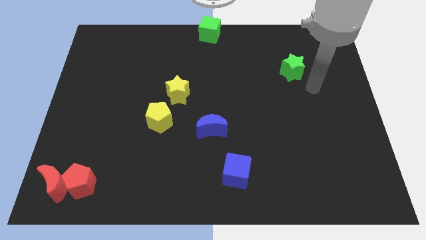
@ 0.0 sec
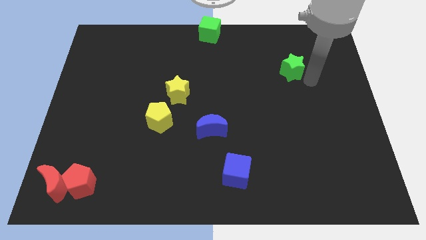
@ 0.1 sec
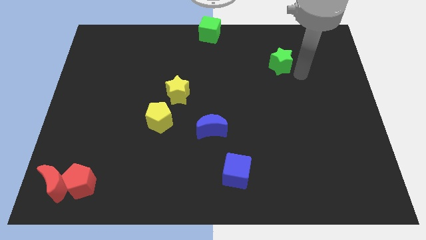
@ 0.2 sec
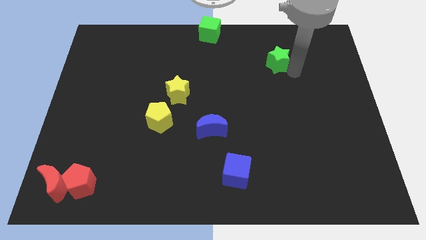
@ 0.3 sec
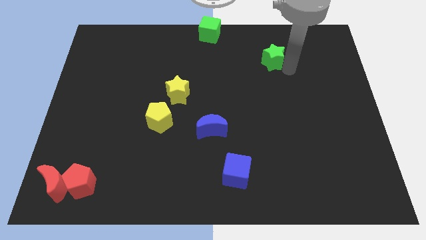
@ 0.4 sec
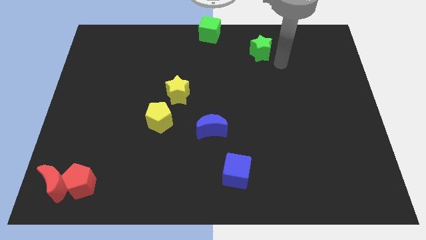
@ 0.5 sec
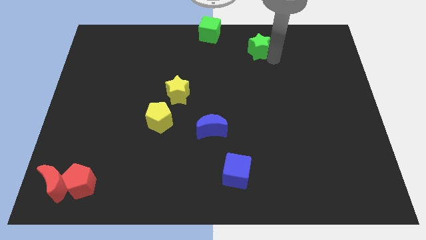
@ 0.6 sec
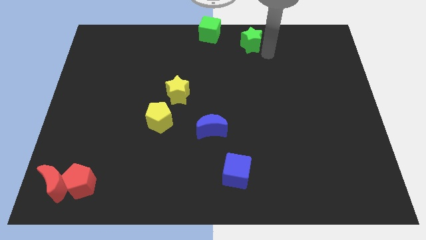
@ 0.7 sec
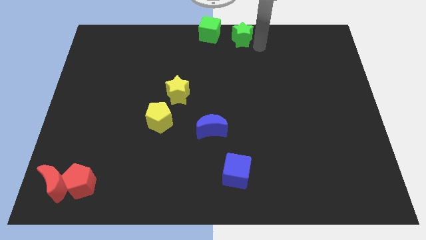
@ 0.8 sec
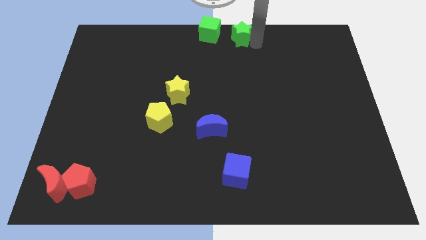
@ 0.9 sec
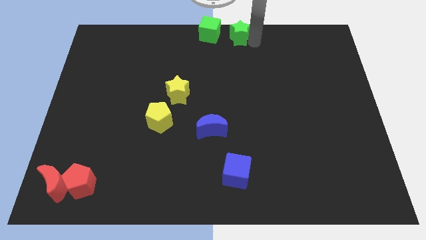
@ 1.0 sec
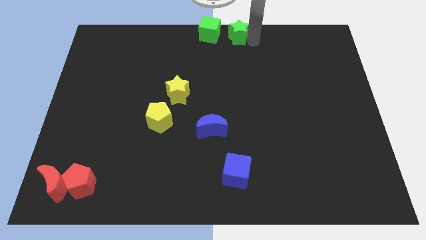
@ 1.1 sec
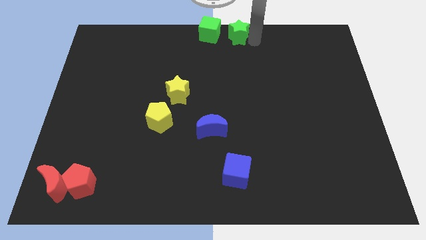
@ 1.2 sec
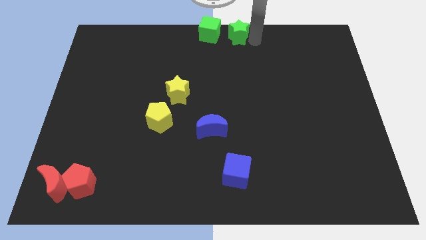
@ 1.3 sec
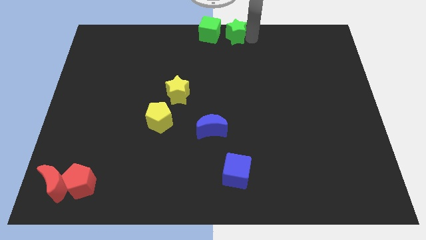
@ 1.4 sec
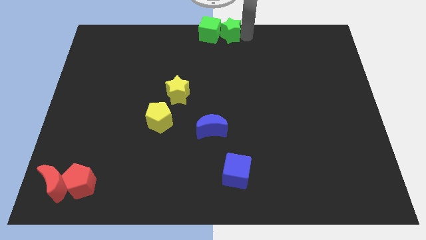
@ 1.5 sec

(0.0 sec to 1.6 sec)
place the green star adjacent to green cube

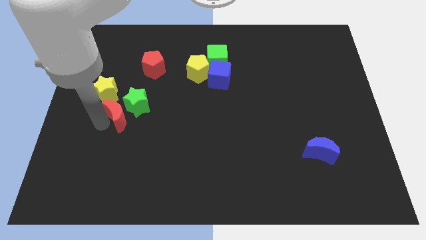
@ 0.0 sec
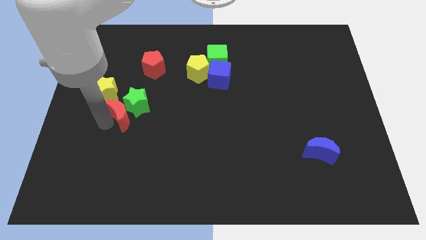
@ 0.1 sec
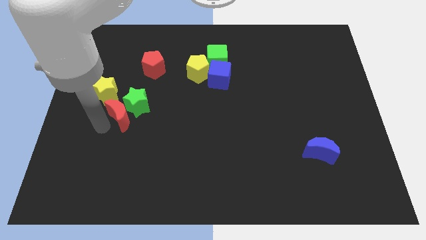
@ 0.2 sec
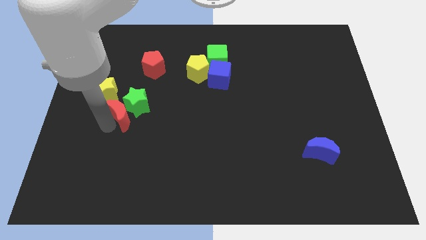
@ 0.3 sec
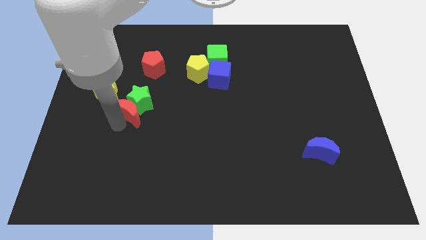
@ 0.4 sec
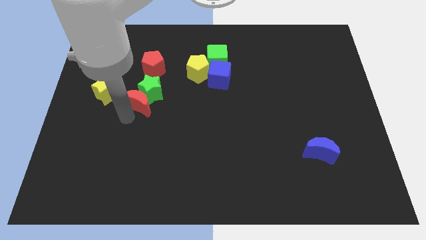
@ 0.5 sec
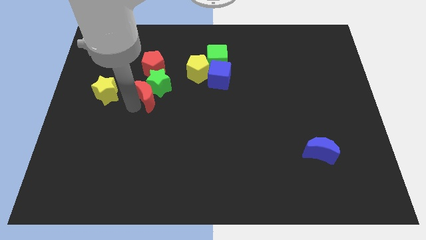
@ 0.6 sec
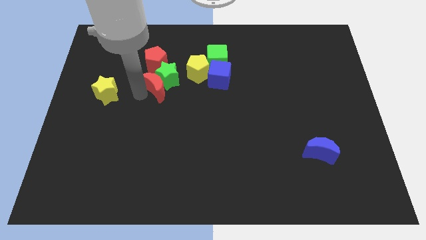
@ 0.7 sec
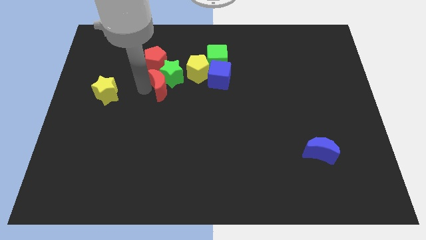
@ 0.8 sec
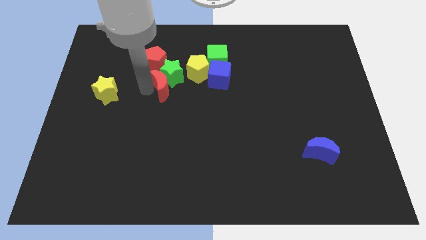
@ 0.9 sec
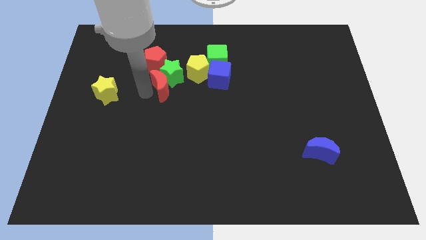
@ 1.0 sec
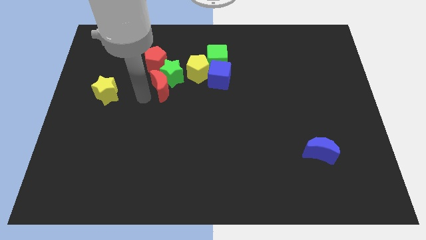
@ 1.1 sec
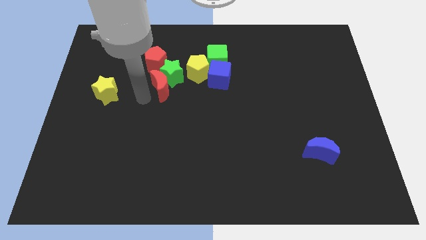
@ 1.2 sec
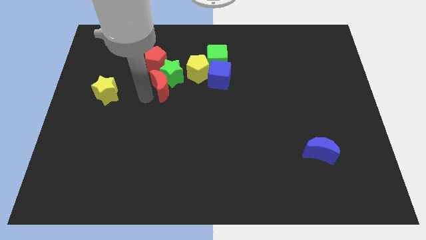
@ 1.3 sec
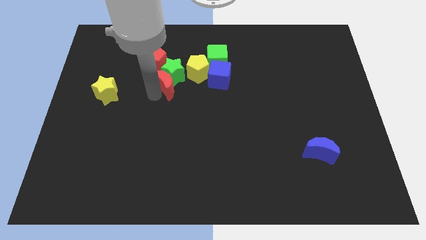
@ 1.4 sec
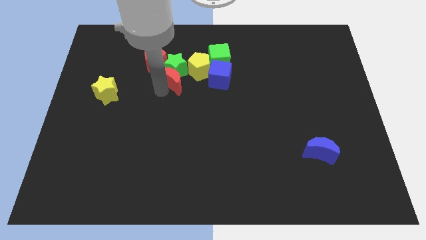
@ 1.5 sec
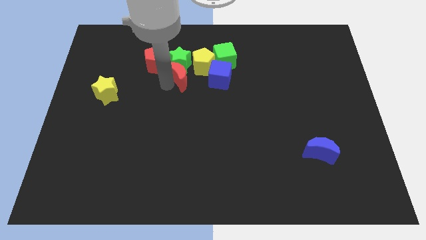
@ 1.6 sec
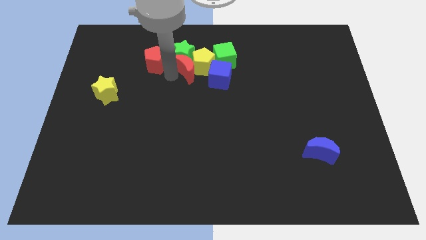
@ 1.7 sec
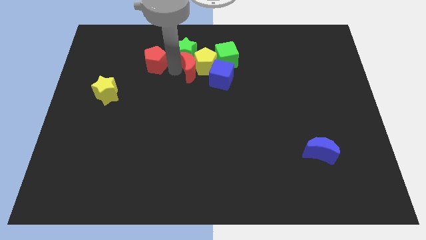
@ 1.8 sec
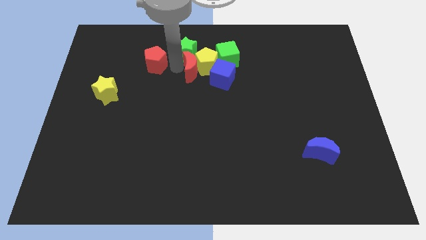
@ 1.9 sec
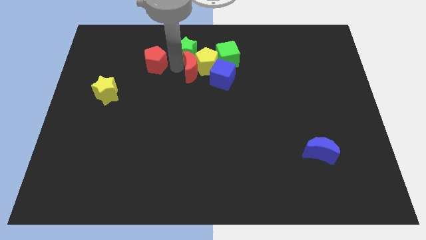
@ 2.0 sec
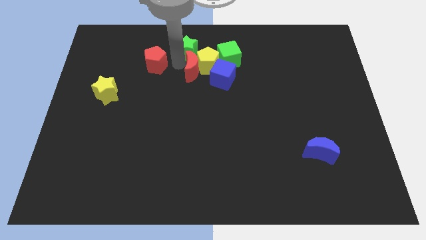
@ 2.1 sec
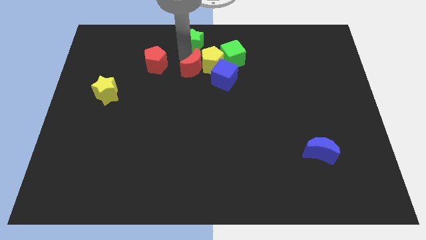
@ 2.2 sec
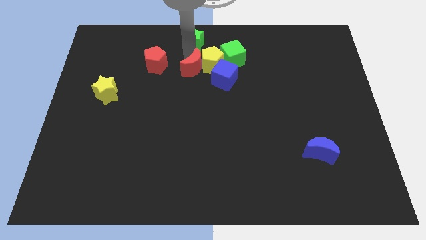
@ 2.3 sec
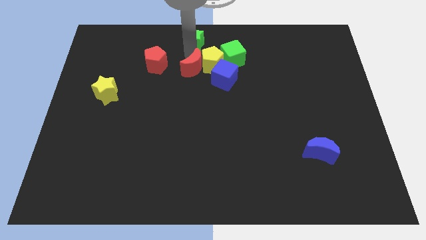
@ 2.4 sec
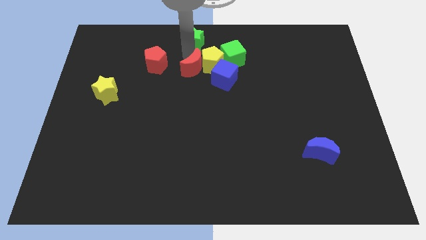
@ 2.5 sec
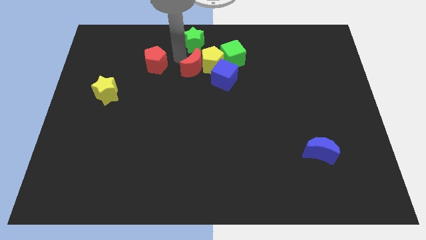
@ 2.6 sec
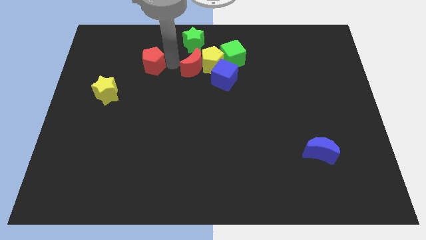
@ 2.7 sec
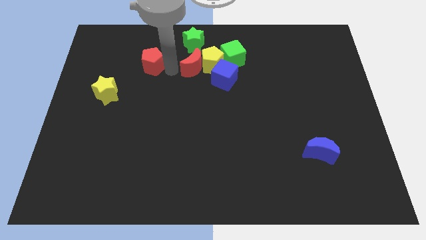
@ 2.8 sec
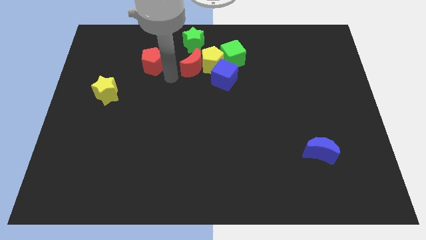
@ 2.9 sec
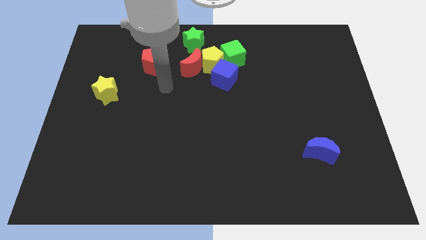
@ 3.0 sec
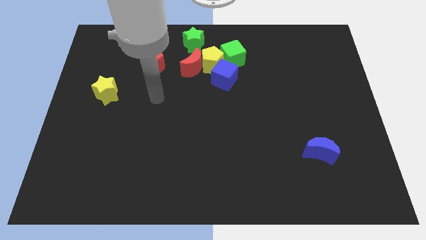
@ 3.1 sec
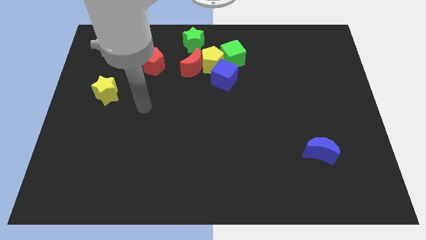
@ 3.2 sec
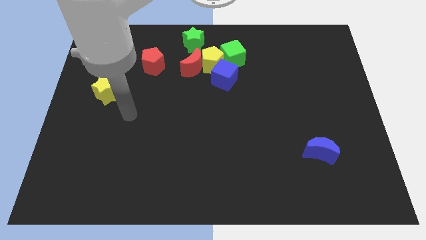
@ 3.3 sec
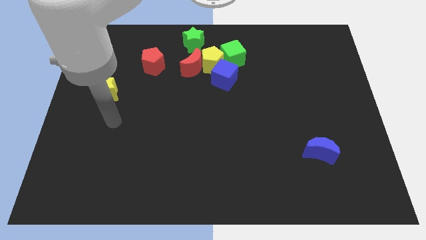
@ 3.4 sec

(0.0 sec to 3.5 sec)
push the red crescent with the green star towards the top of the board

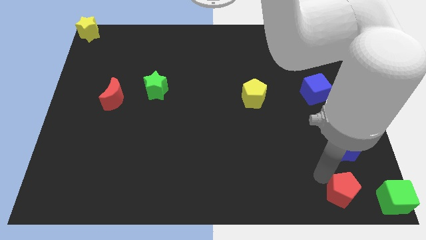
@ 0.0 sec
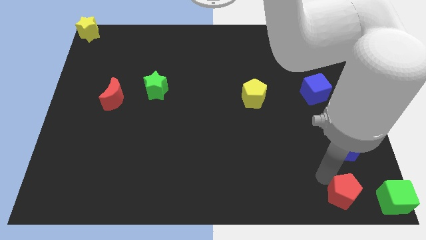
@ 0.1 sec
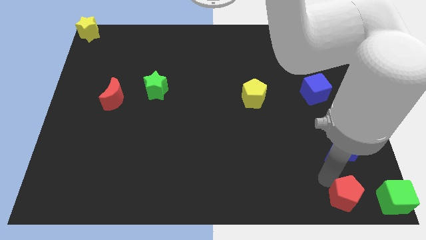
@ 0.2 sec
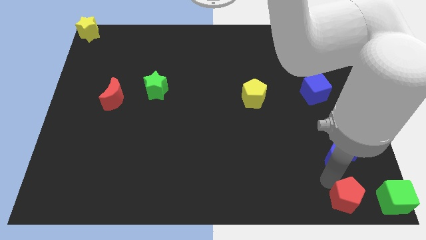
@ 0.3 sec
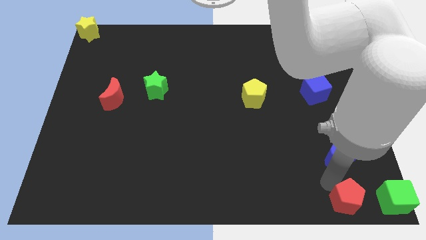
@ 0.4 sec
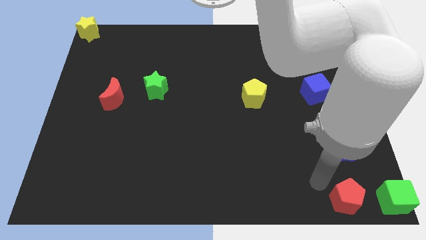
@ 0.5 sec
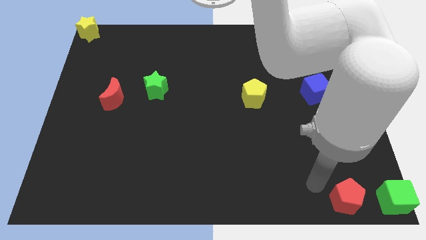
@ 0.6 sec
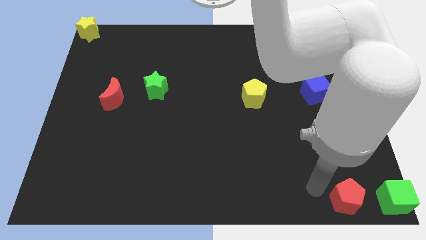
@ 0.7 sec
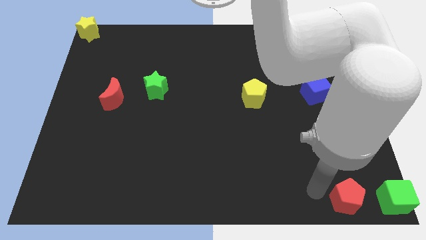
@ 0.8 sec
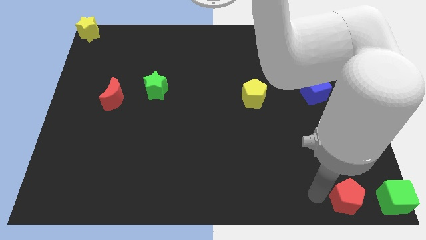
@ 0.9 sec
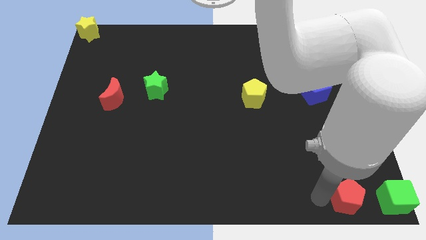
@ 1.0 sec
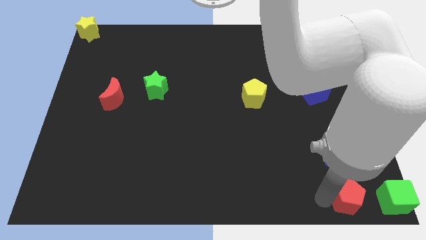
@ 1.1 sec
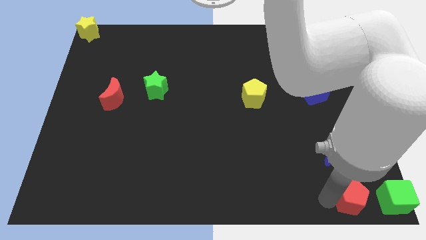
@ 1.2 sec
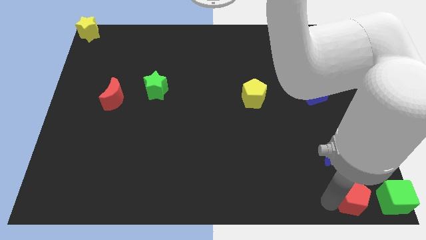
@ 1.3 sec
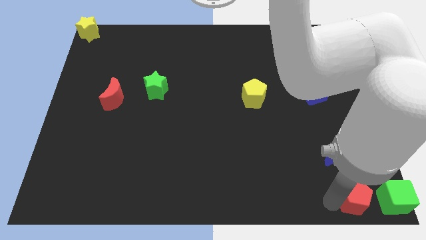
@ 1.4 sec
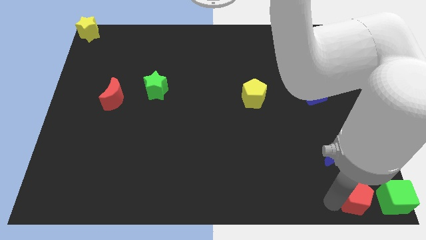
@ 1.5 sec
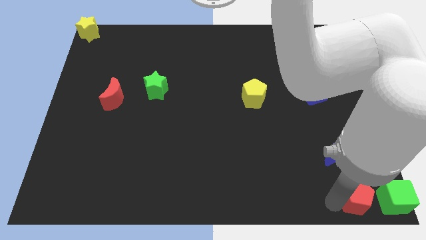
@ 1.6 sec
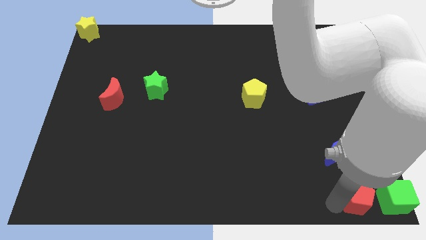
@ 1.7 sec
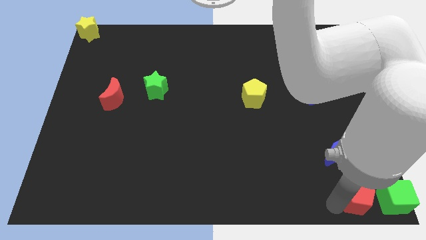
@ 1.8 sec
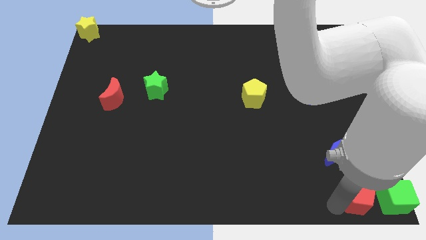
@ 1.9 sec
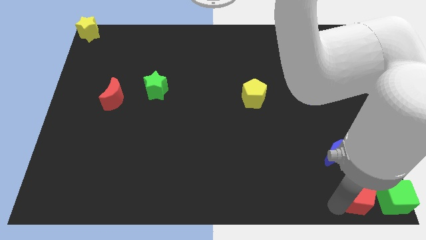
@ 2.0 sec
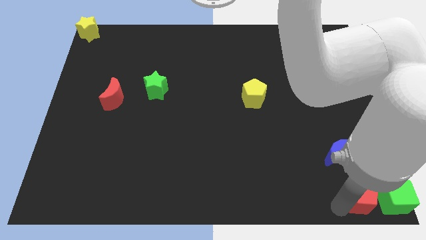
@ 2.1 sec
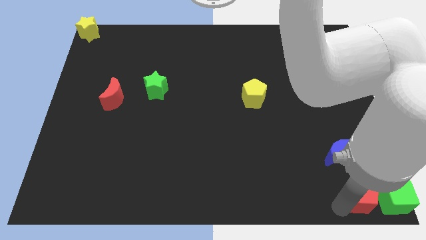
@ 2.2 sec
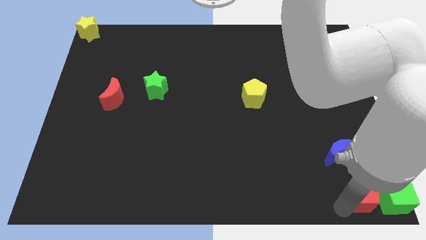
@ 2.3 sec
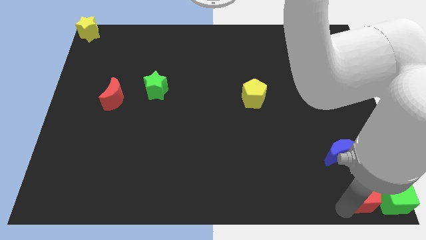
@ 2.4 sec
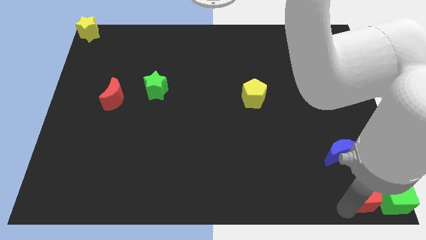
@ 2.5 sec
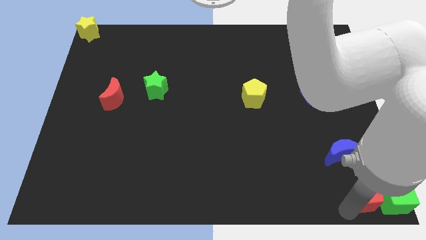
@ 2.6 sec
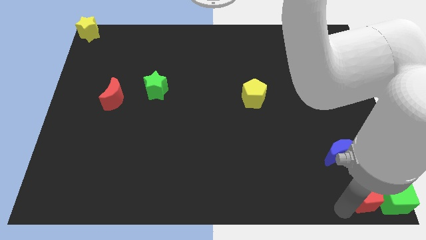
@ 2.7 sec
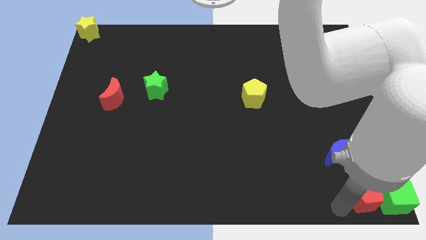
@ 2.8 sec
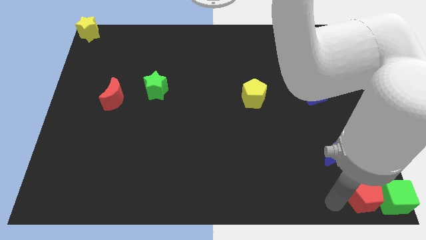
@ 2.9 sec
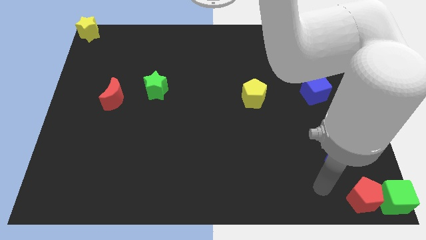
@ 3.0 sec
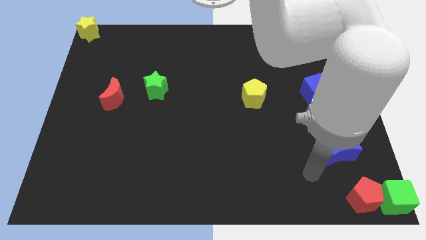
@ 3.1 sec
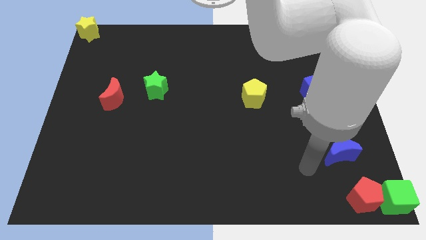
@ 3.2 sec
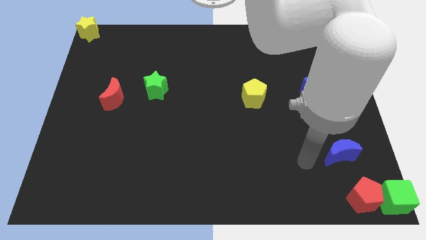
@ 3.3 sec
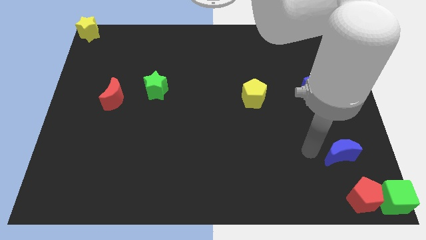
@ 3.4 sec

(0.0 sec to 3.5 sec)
move the red pentagon to the left side of the green cube

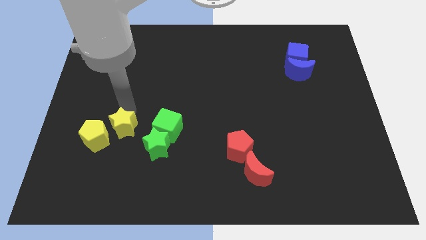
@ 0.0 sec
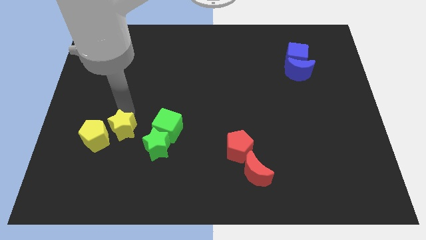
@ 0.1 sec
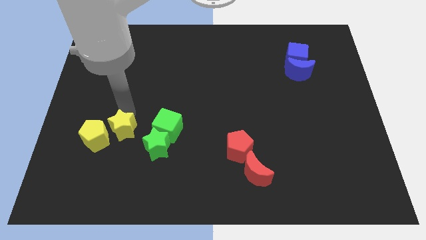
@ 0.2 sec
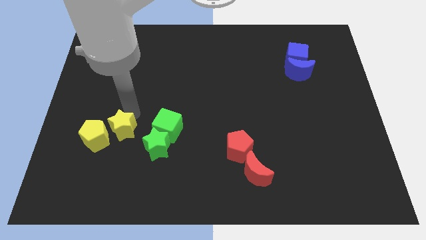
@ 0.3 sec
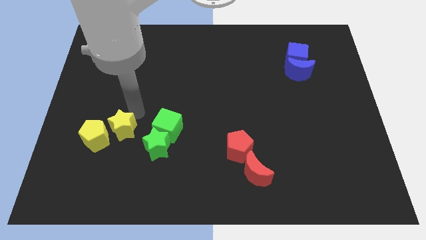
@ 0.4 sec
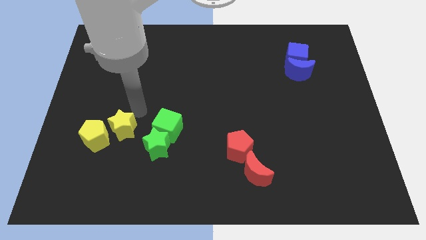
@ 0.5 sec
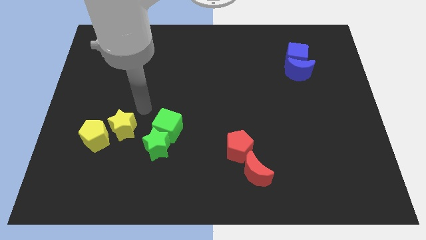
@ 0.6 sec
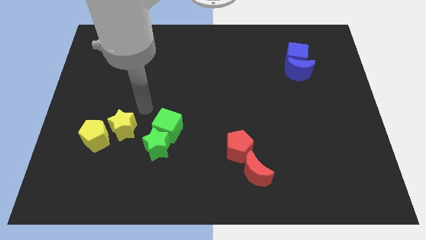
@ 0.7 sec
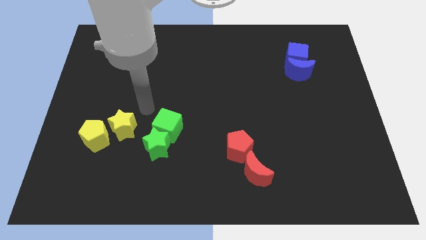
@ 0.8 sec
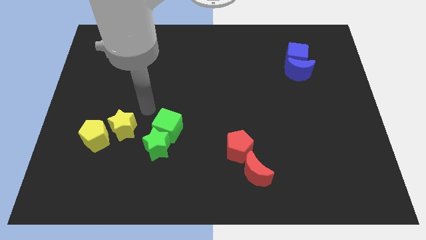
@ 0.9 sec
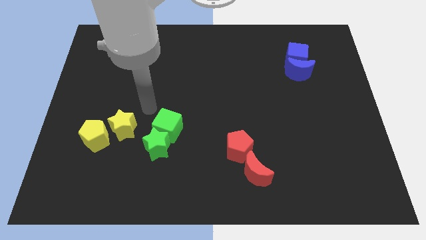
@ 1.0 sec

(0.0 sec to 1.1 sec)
move your arm from the yellow star
